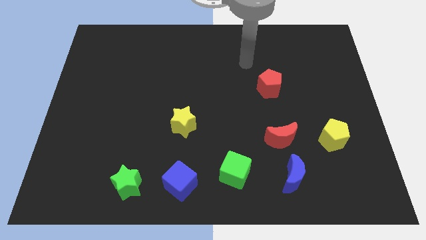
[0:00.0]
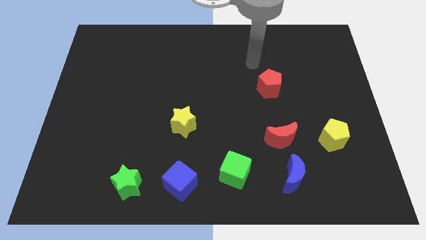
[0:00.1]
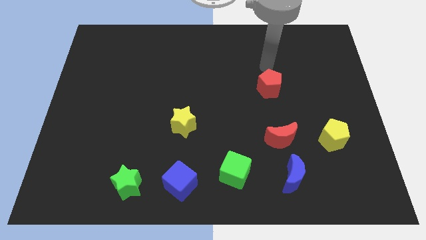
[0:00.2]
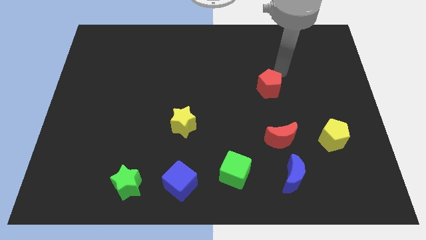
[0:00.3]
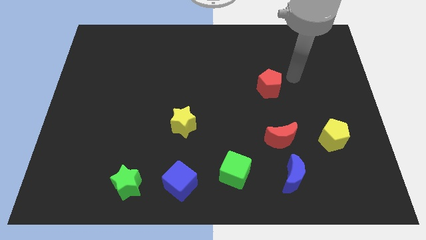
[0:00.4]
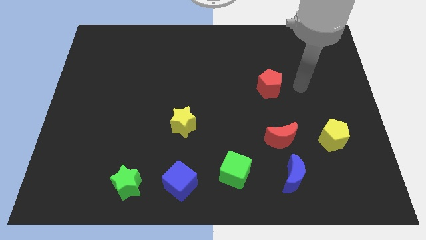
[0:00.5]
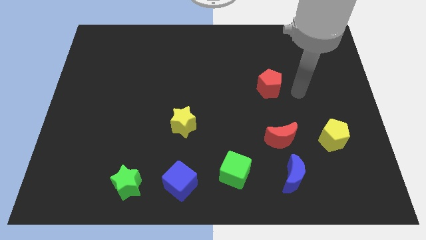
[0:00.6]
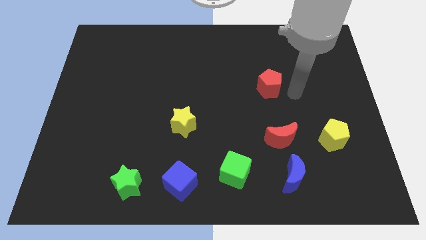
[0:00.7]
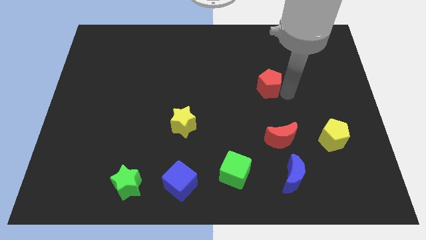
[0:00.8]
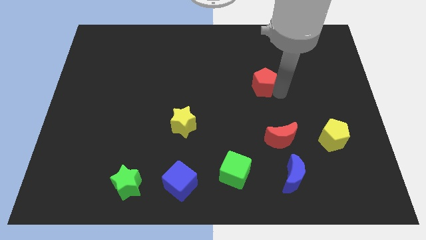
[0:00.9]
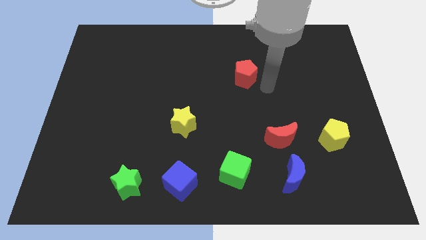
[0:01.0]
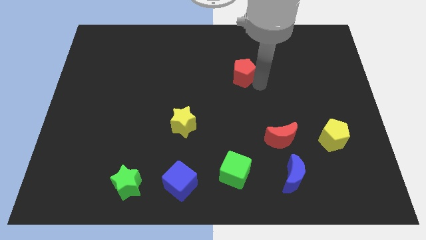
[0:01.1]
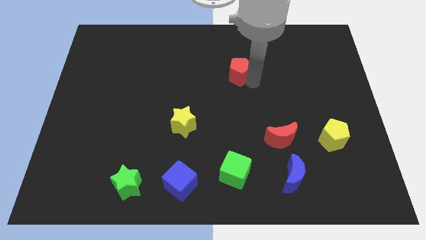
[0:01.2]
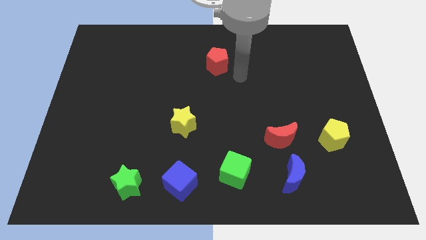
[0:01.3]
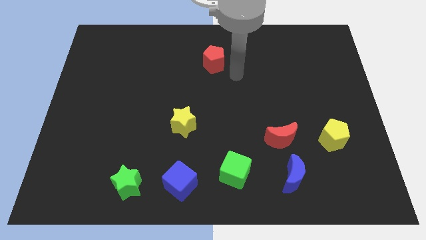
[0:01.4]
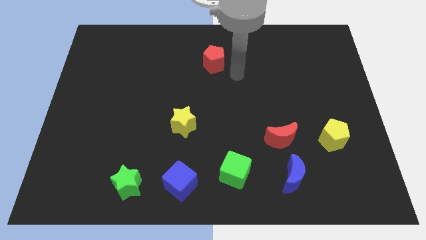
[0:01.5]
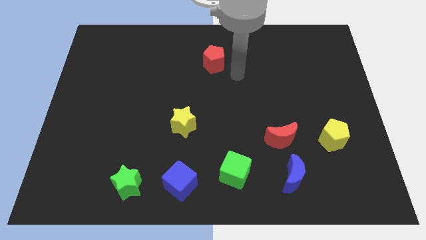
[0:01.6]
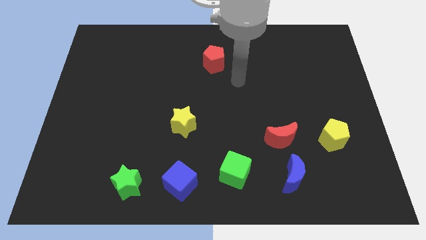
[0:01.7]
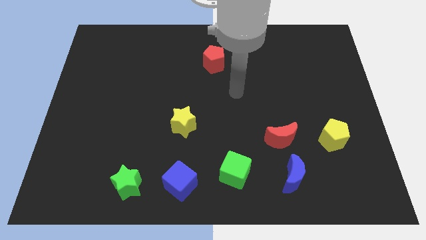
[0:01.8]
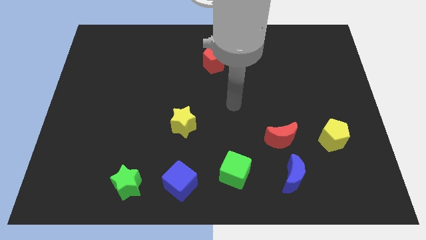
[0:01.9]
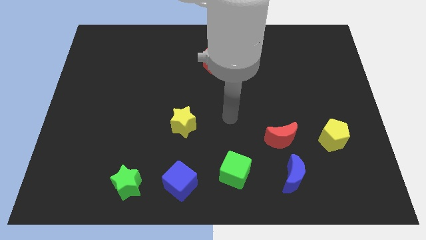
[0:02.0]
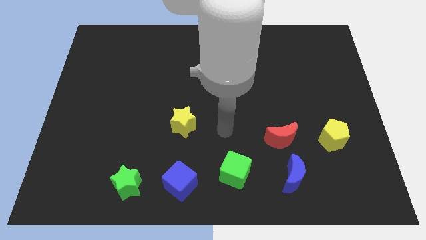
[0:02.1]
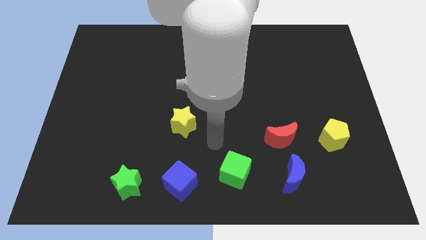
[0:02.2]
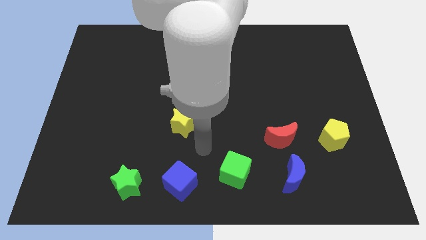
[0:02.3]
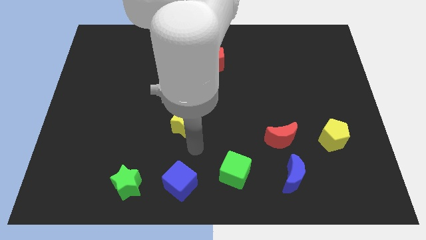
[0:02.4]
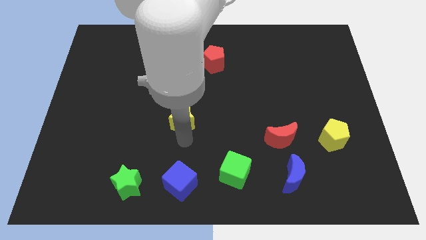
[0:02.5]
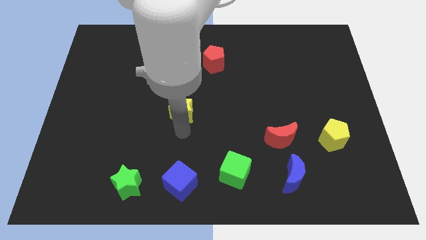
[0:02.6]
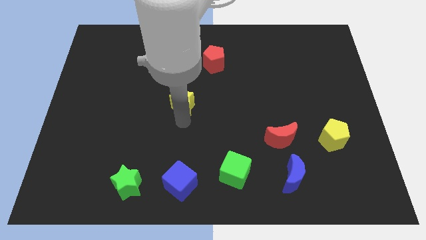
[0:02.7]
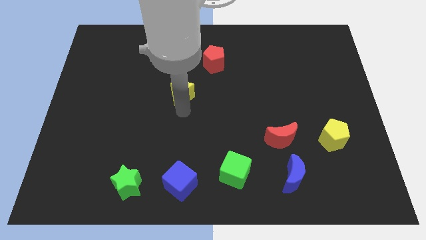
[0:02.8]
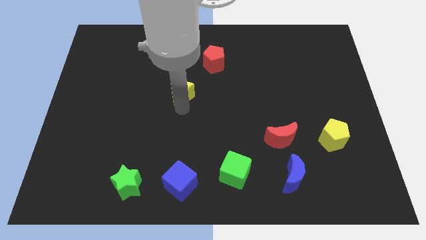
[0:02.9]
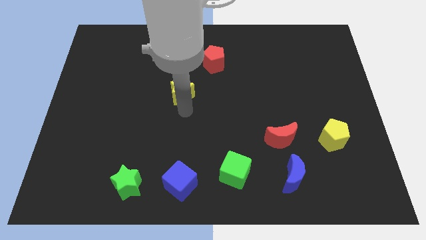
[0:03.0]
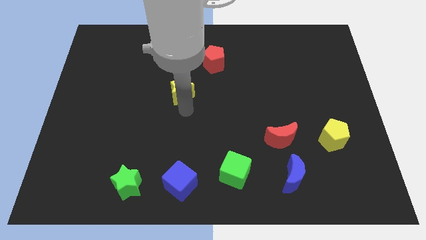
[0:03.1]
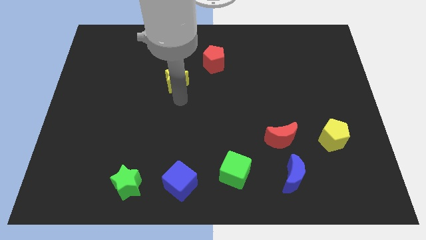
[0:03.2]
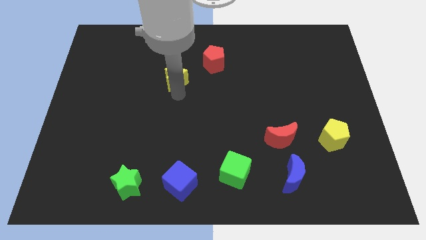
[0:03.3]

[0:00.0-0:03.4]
push the yellow star and red pentagon to the top center

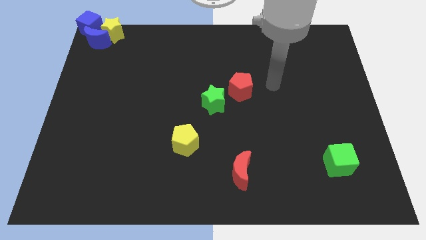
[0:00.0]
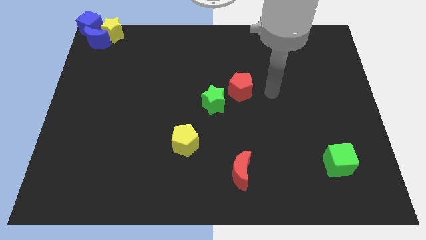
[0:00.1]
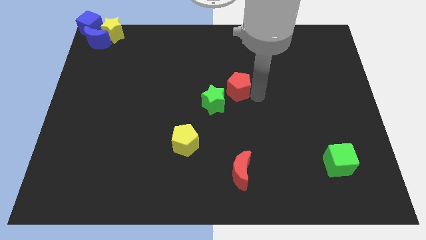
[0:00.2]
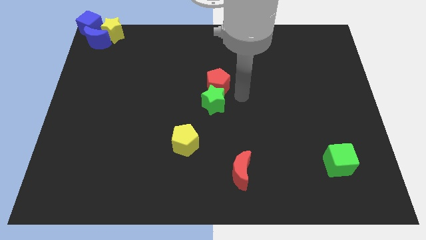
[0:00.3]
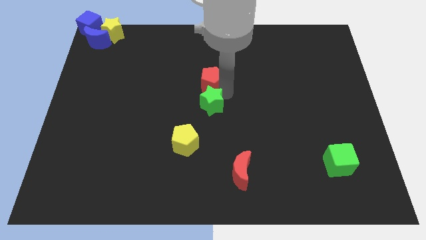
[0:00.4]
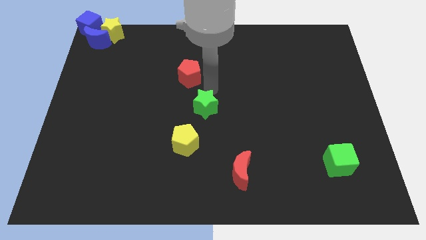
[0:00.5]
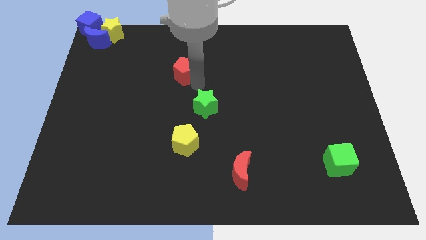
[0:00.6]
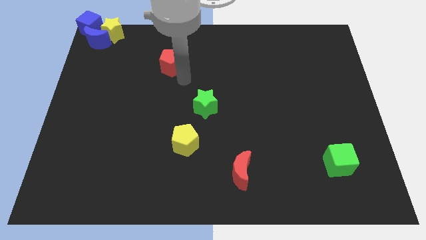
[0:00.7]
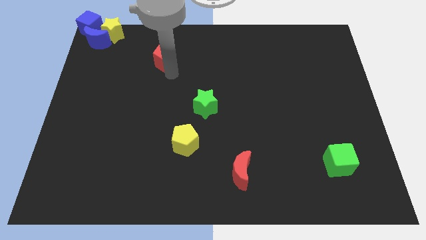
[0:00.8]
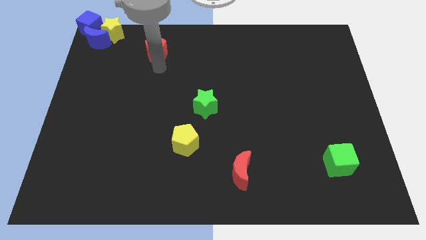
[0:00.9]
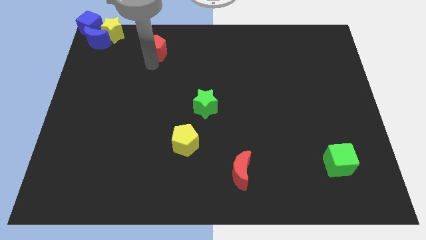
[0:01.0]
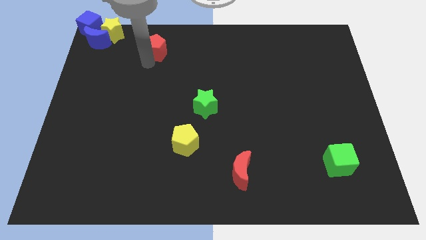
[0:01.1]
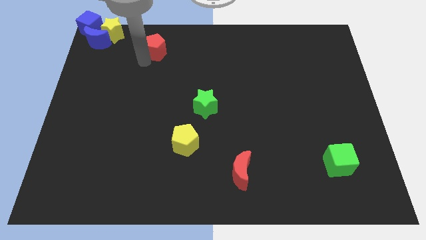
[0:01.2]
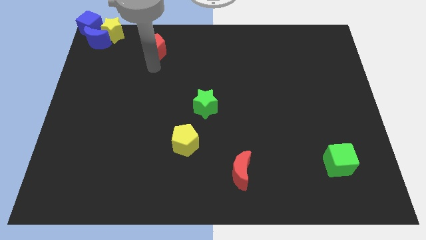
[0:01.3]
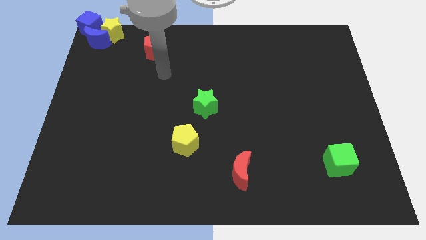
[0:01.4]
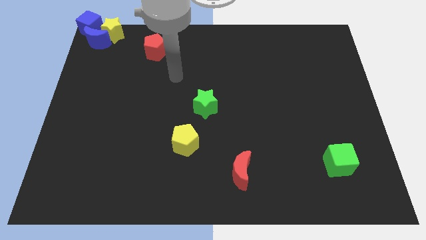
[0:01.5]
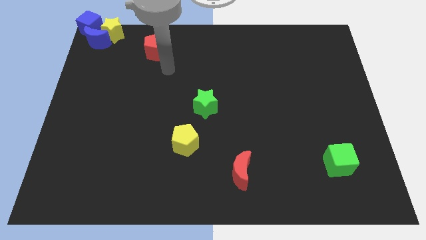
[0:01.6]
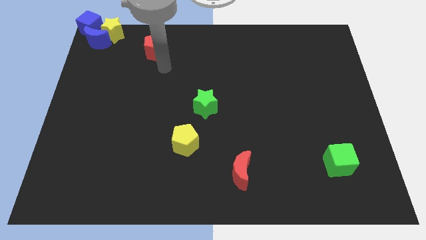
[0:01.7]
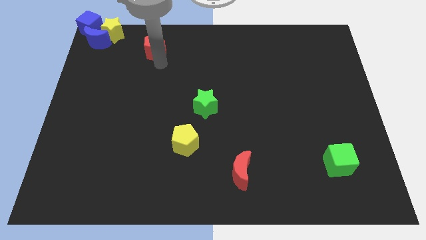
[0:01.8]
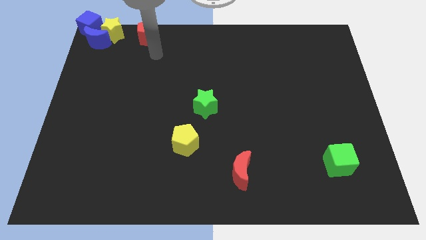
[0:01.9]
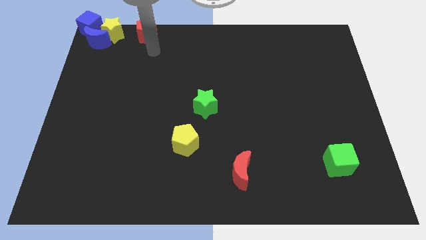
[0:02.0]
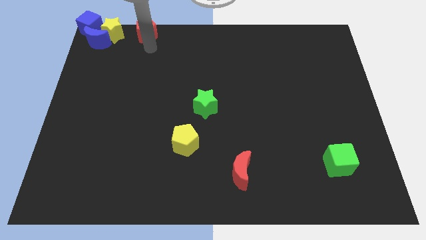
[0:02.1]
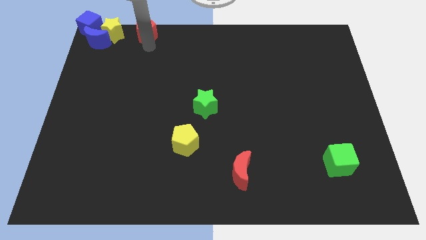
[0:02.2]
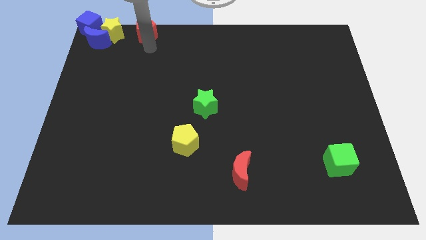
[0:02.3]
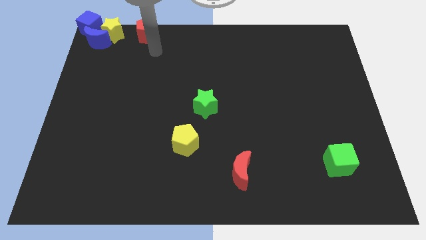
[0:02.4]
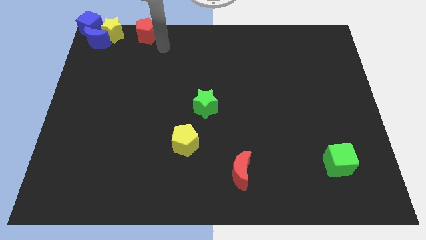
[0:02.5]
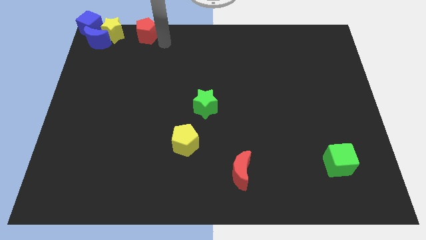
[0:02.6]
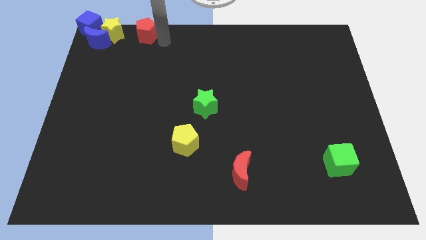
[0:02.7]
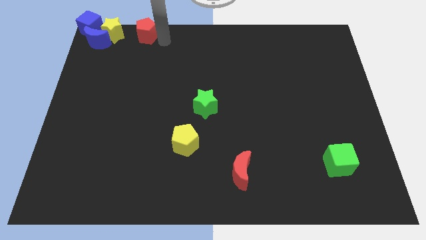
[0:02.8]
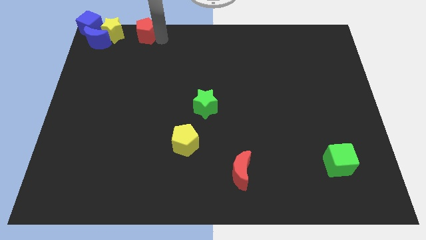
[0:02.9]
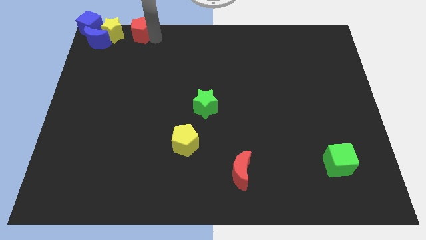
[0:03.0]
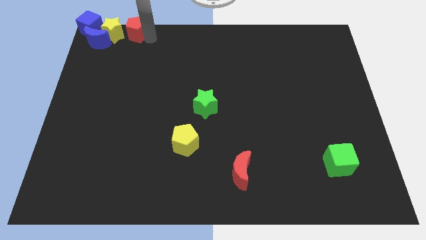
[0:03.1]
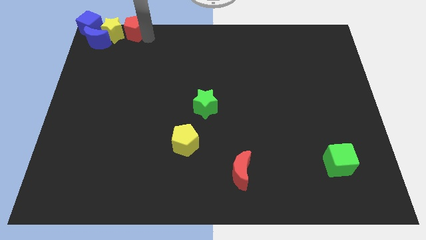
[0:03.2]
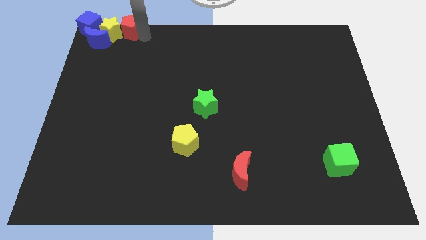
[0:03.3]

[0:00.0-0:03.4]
move the red pentagon to the right of the yellow star

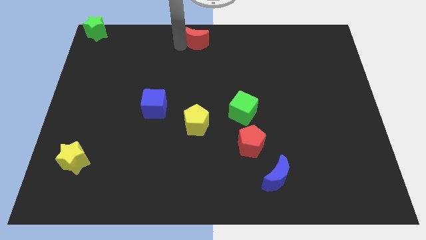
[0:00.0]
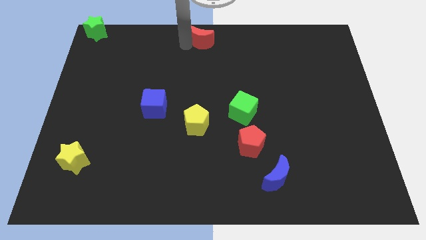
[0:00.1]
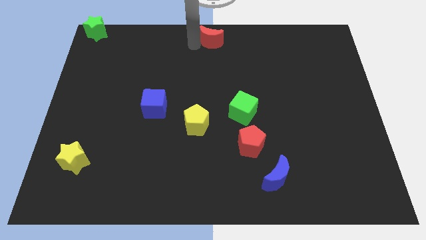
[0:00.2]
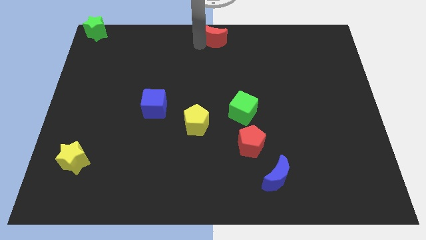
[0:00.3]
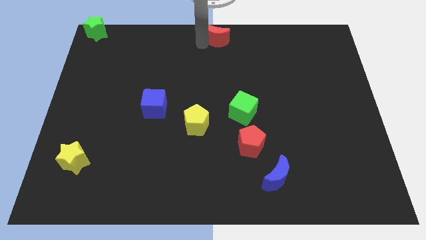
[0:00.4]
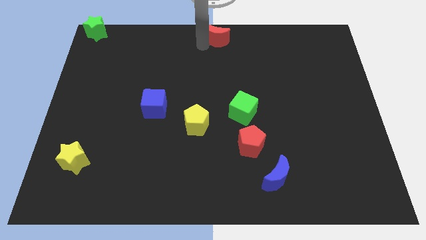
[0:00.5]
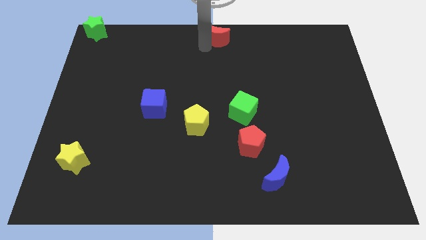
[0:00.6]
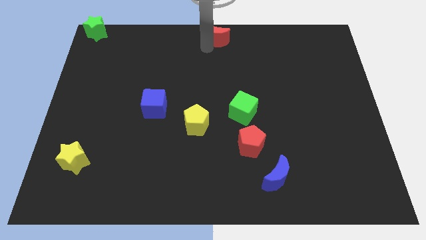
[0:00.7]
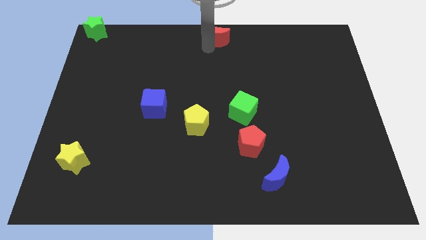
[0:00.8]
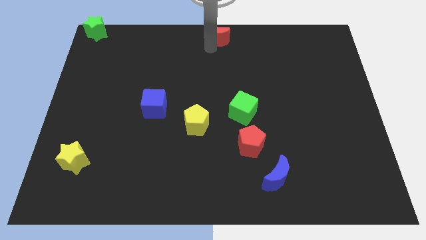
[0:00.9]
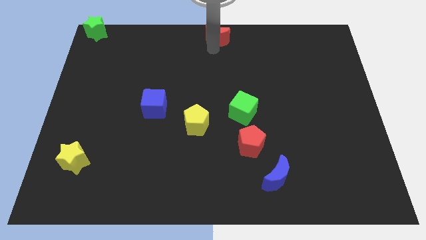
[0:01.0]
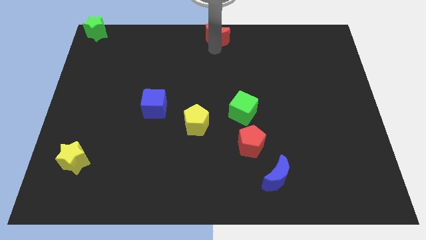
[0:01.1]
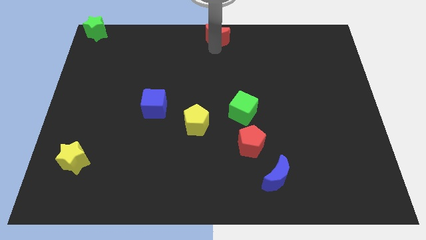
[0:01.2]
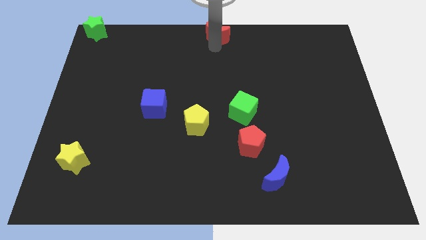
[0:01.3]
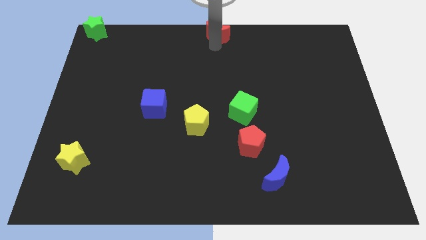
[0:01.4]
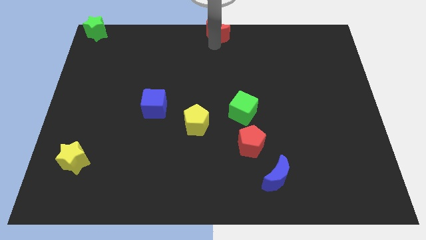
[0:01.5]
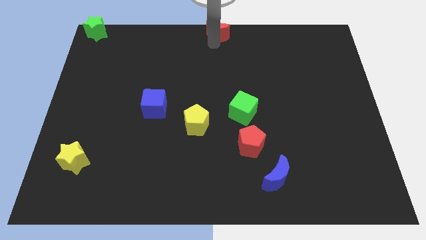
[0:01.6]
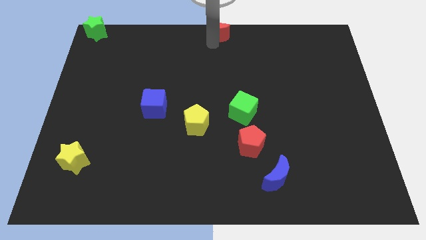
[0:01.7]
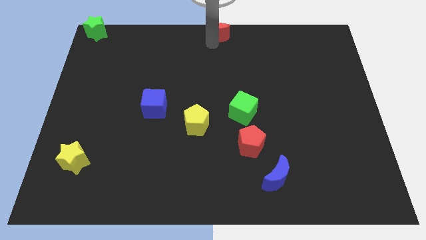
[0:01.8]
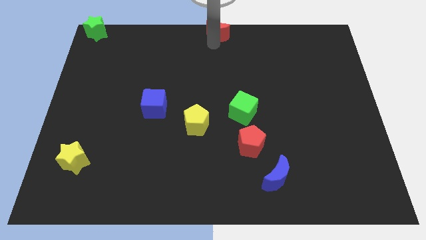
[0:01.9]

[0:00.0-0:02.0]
put the red moon at the top center
